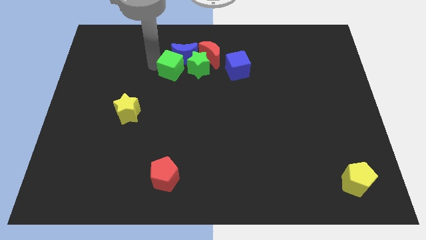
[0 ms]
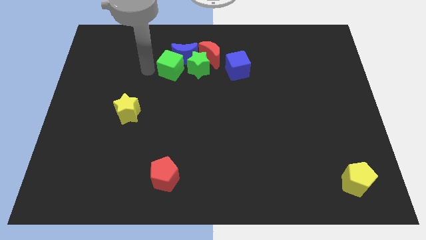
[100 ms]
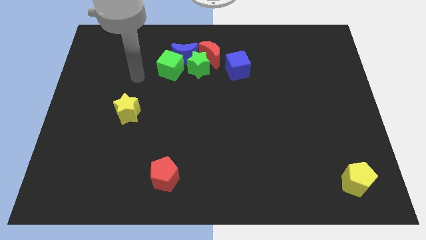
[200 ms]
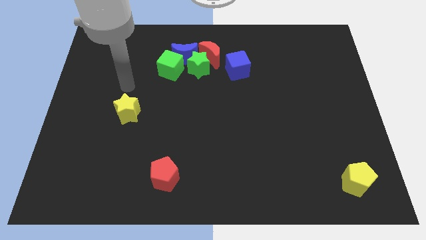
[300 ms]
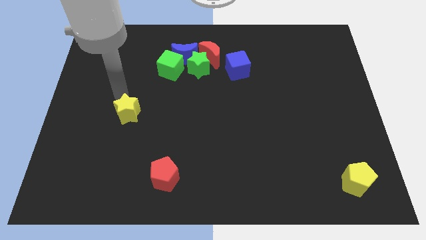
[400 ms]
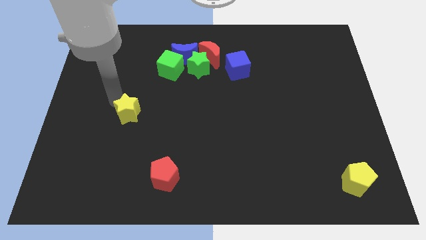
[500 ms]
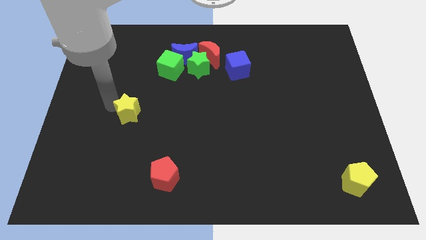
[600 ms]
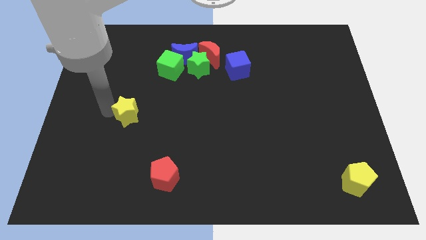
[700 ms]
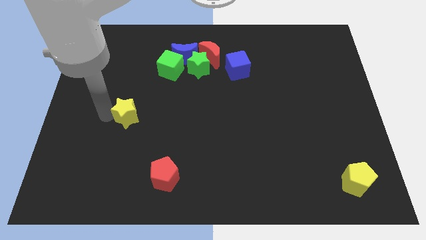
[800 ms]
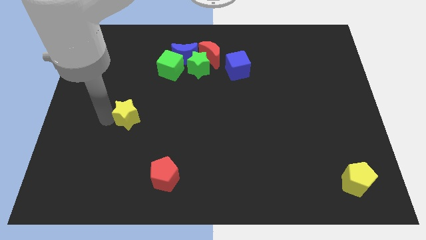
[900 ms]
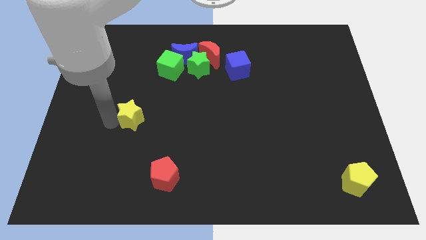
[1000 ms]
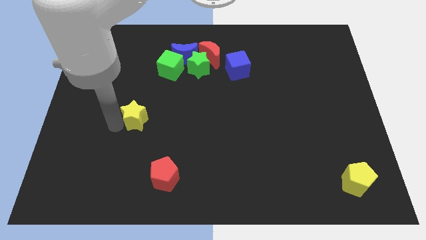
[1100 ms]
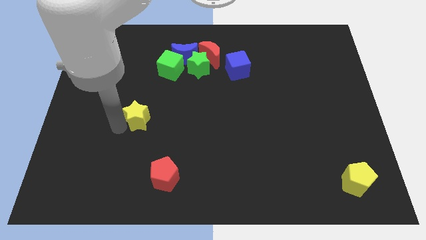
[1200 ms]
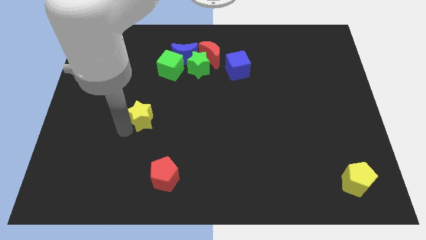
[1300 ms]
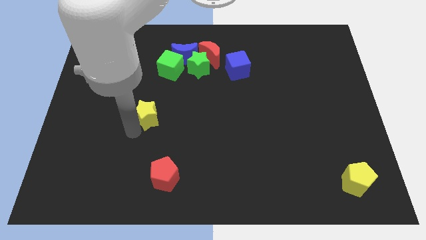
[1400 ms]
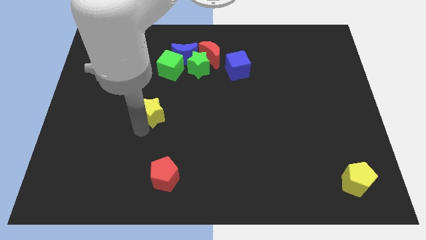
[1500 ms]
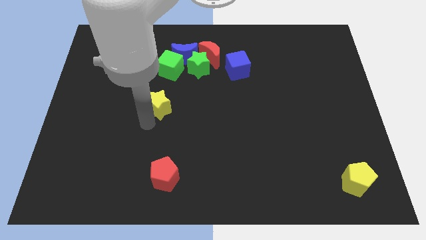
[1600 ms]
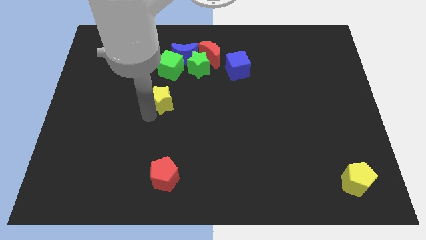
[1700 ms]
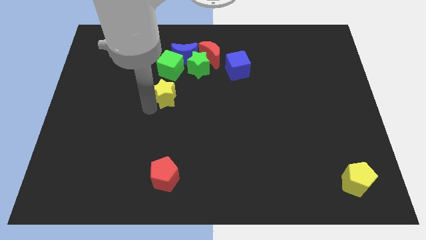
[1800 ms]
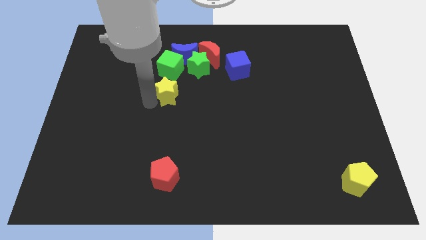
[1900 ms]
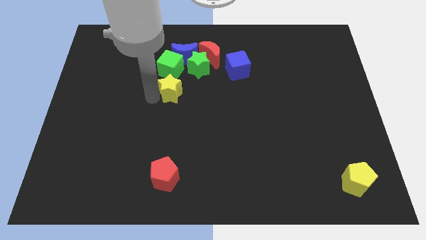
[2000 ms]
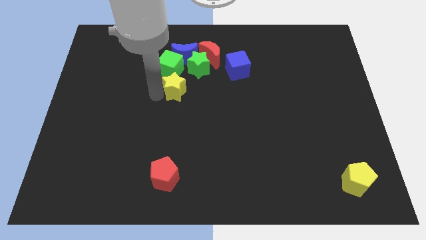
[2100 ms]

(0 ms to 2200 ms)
push the yellow star towards the green blocks

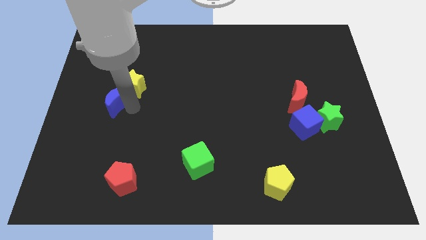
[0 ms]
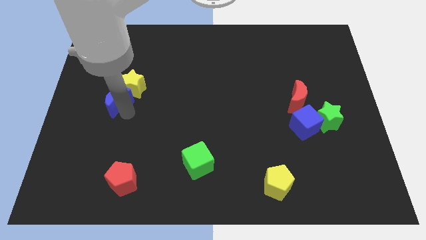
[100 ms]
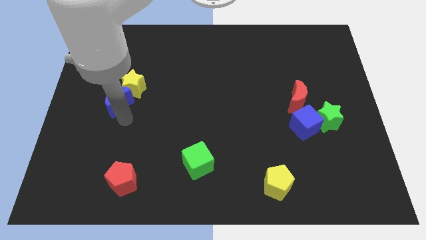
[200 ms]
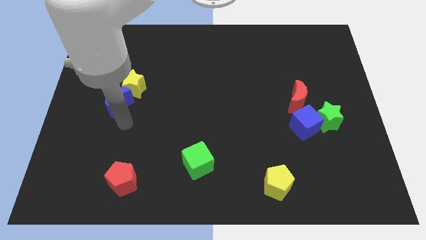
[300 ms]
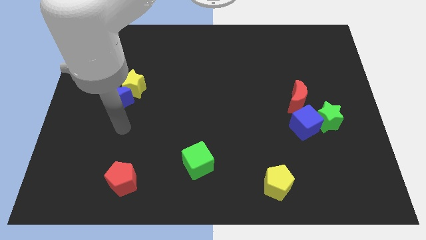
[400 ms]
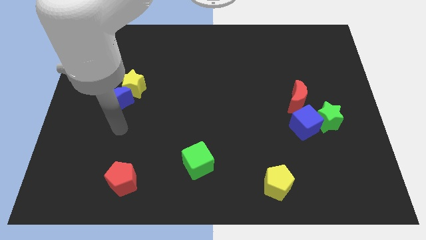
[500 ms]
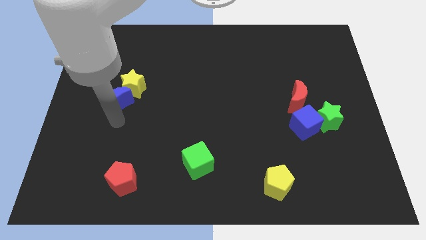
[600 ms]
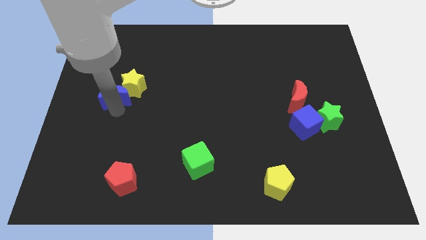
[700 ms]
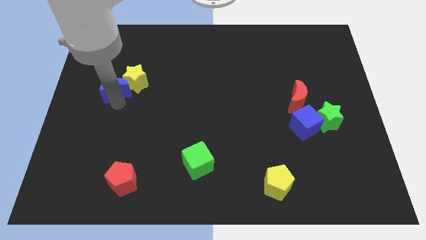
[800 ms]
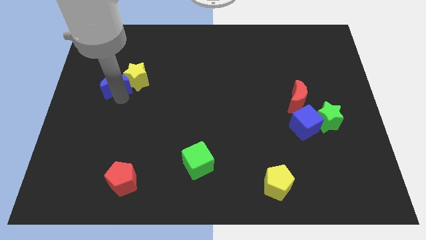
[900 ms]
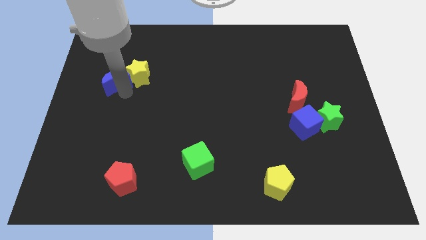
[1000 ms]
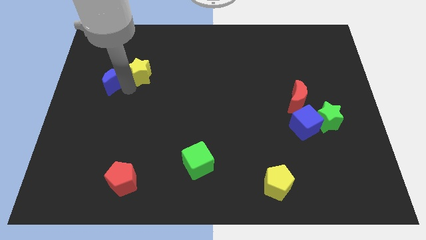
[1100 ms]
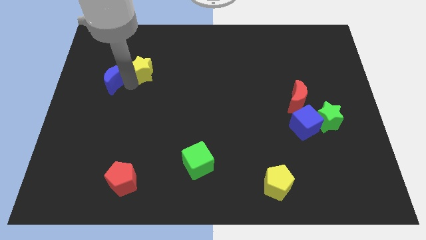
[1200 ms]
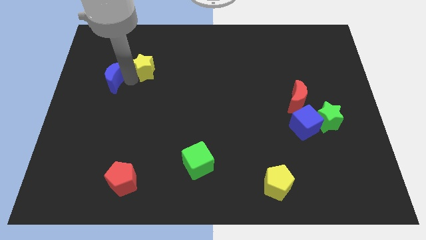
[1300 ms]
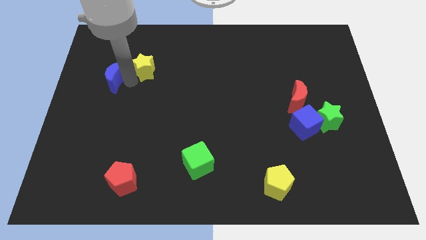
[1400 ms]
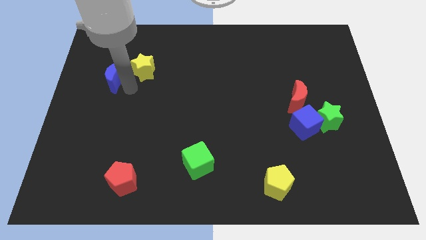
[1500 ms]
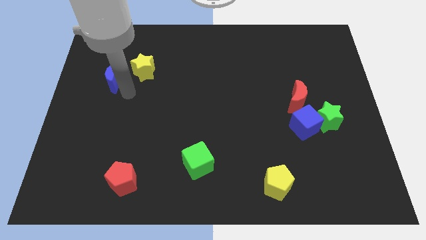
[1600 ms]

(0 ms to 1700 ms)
push the yellow star and blue moon towards the top side of the board

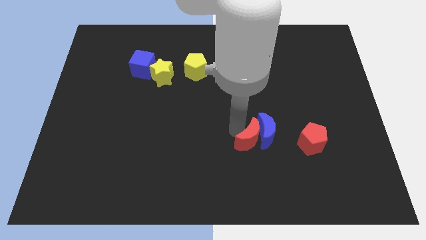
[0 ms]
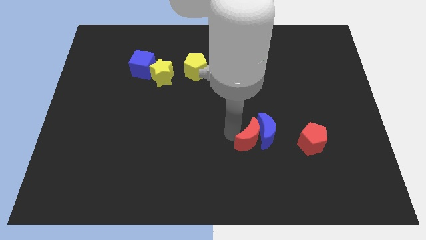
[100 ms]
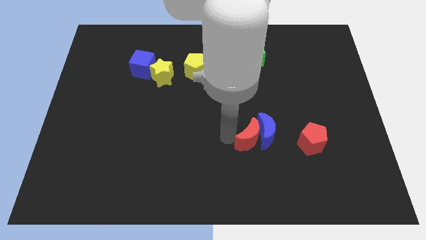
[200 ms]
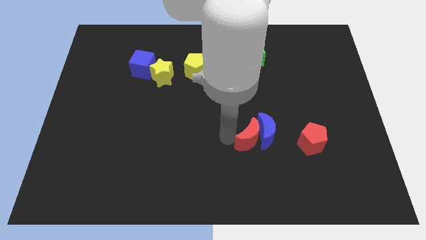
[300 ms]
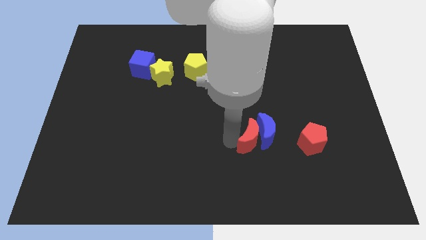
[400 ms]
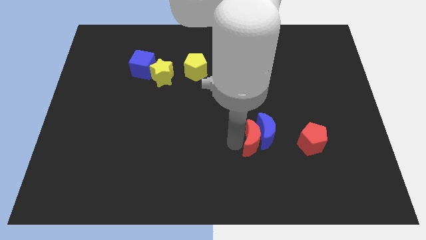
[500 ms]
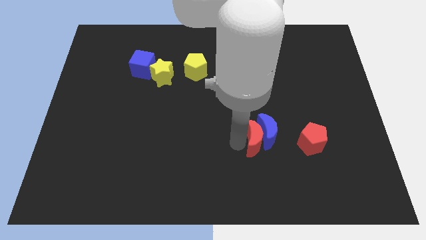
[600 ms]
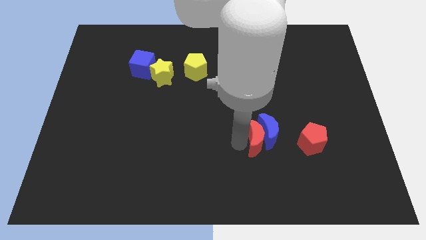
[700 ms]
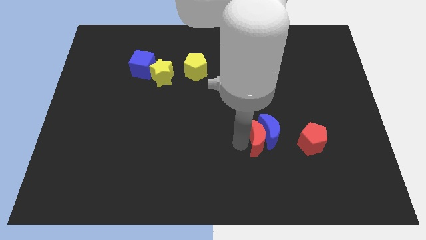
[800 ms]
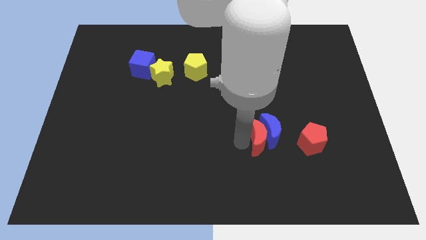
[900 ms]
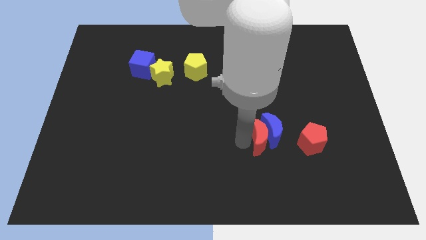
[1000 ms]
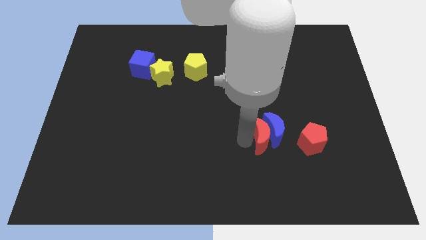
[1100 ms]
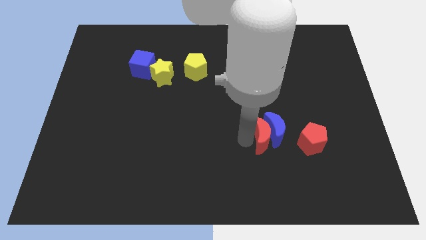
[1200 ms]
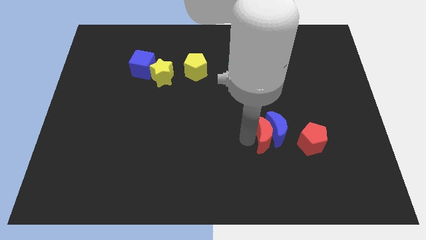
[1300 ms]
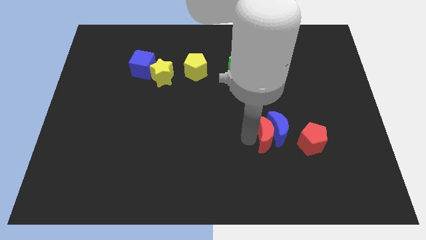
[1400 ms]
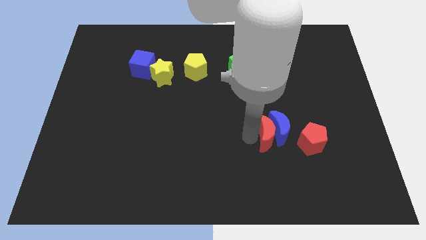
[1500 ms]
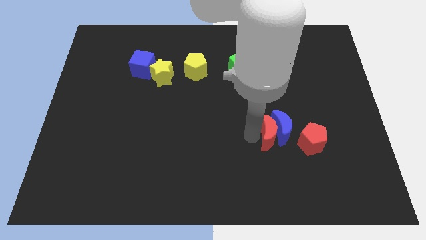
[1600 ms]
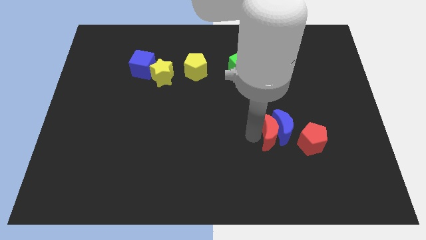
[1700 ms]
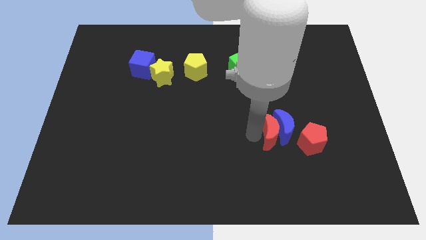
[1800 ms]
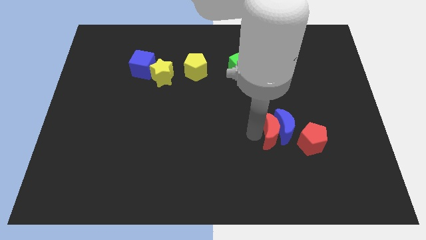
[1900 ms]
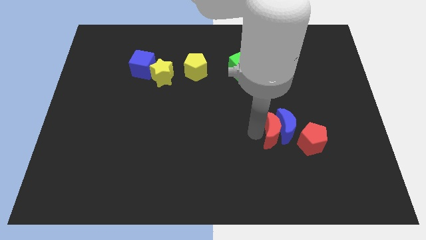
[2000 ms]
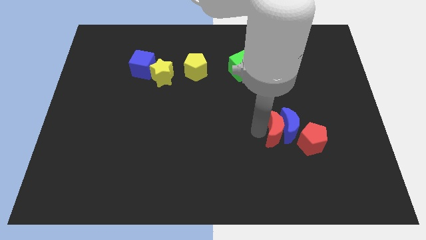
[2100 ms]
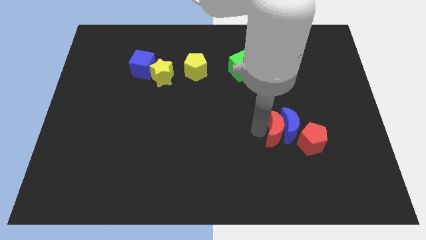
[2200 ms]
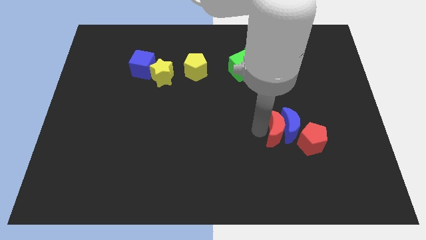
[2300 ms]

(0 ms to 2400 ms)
push red moon into blue moon

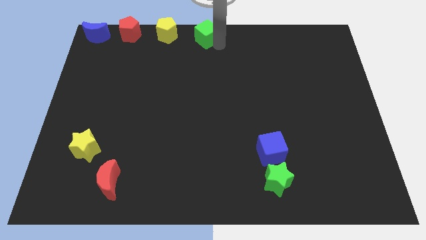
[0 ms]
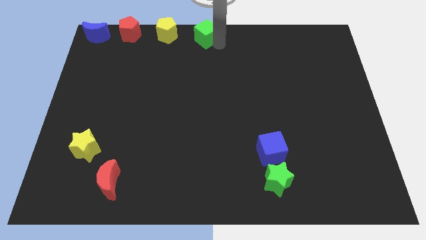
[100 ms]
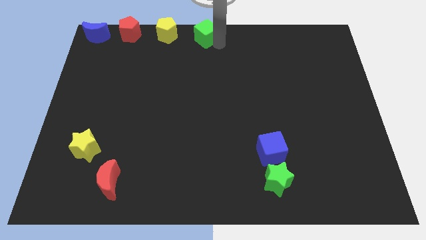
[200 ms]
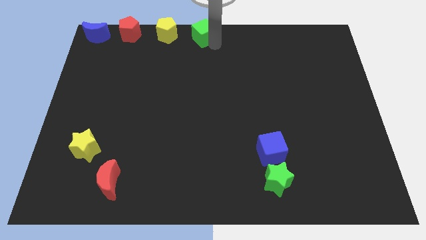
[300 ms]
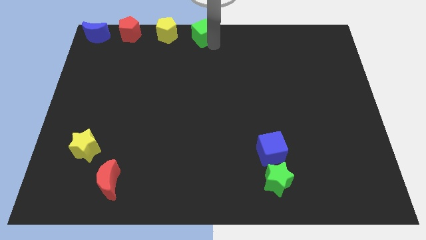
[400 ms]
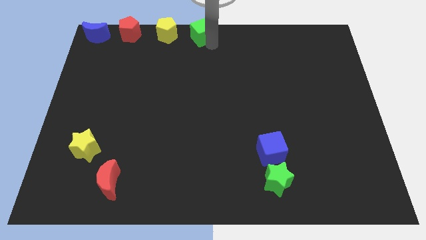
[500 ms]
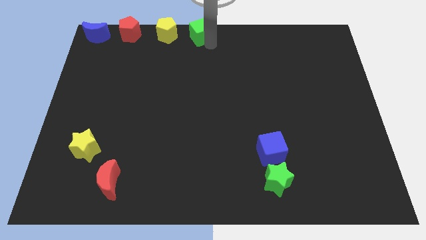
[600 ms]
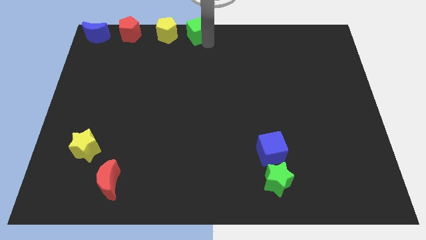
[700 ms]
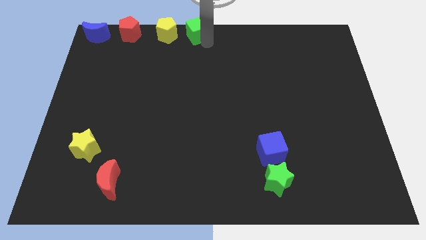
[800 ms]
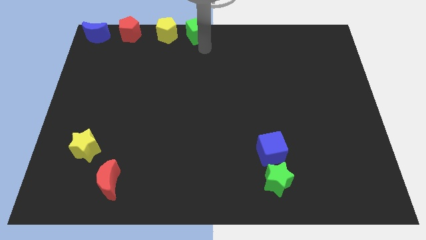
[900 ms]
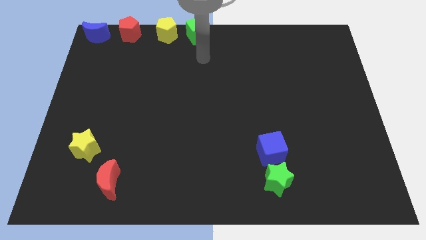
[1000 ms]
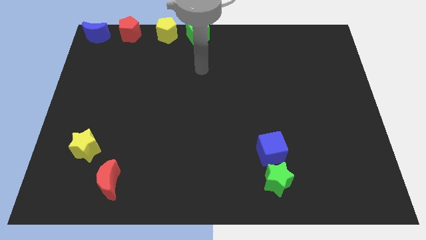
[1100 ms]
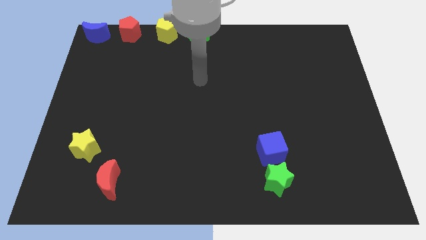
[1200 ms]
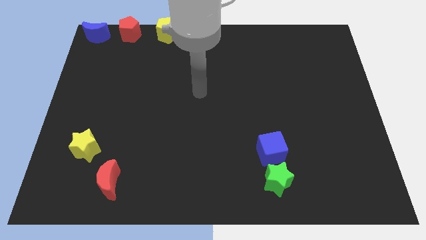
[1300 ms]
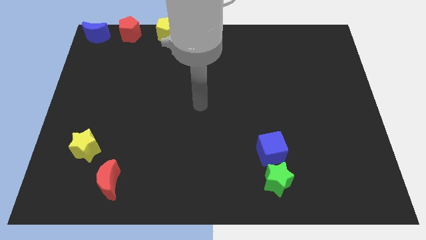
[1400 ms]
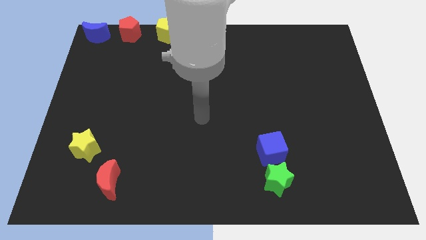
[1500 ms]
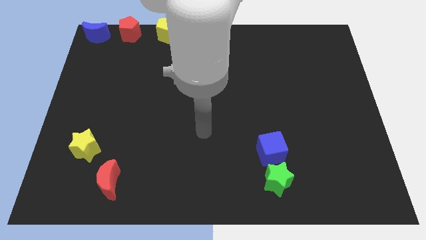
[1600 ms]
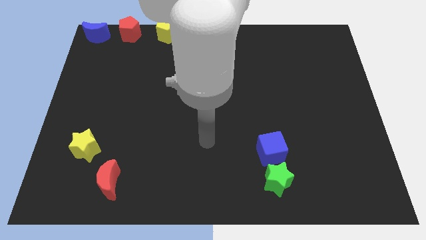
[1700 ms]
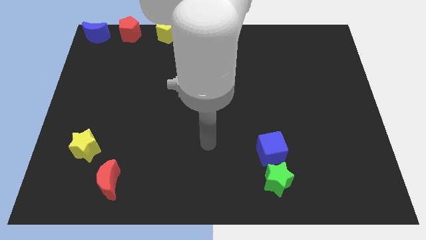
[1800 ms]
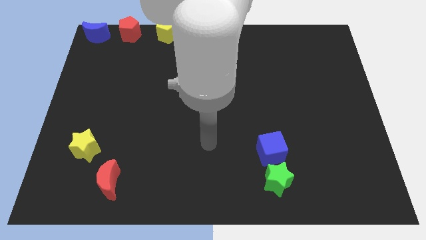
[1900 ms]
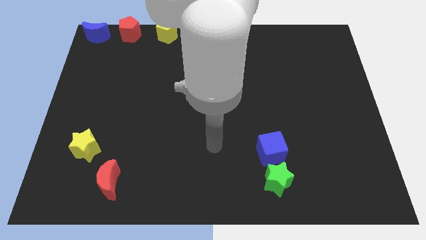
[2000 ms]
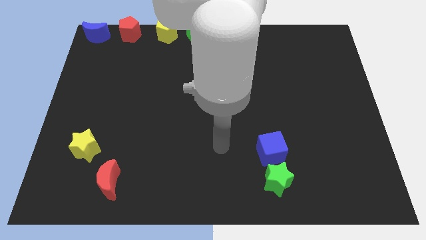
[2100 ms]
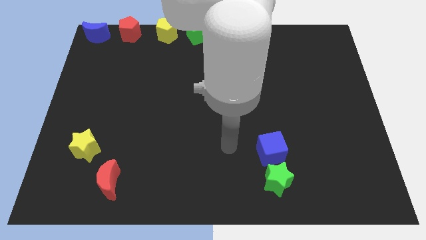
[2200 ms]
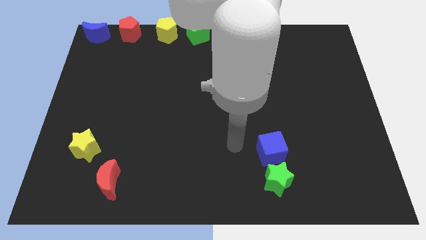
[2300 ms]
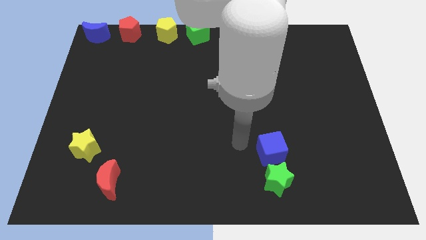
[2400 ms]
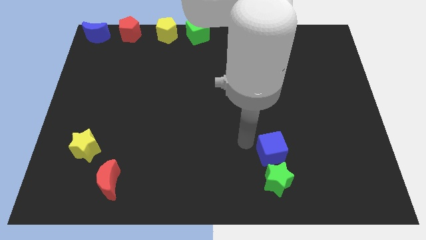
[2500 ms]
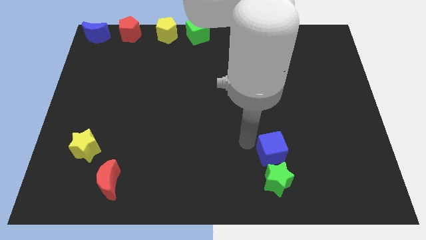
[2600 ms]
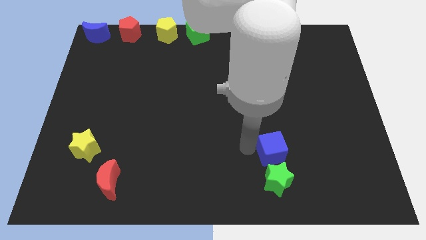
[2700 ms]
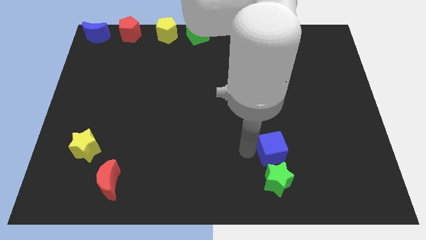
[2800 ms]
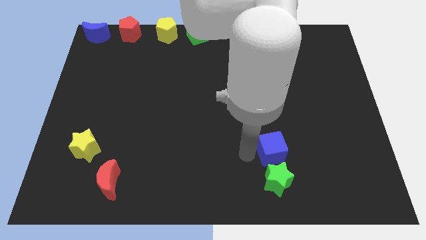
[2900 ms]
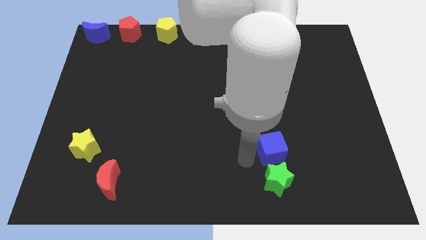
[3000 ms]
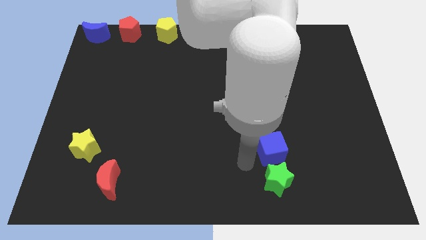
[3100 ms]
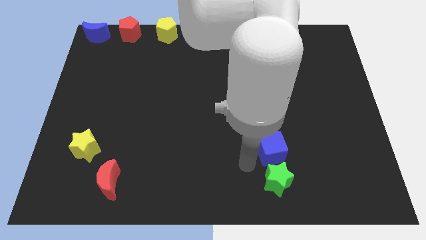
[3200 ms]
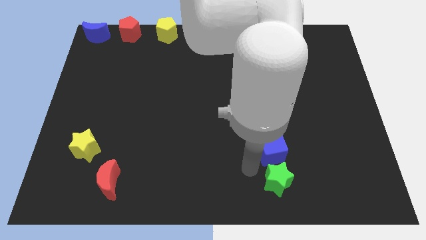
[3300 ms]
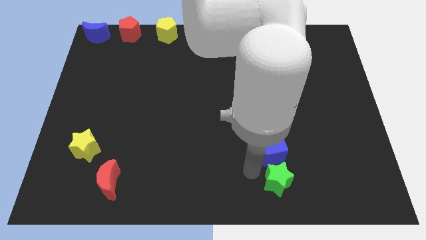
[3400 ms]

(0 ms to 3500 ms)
move away from the green cube
